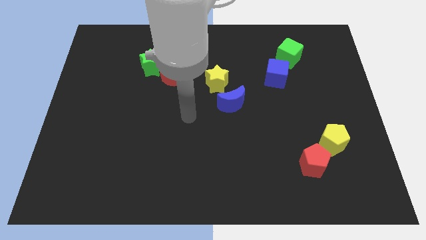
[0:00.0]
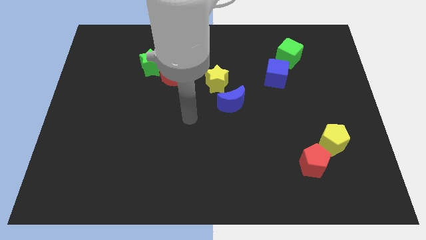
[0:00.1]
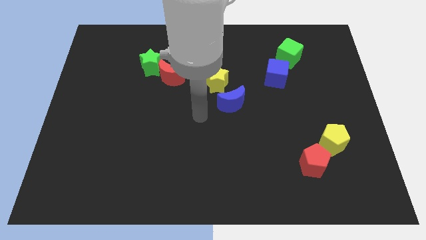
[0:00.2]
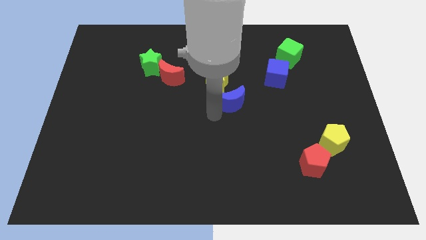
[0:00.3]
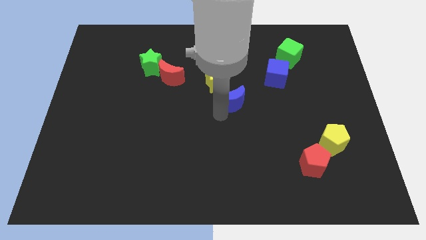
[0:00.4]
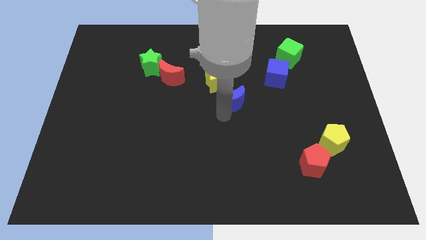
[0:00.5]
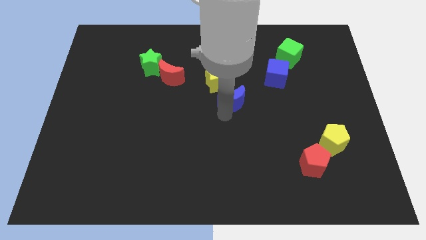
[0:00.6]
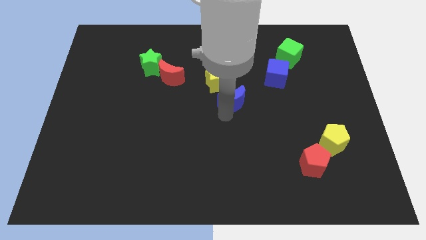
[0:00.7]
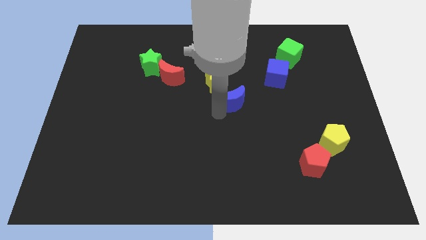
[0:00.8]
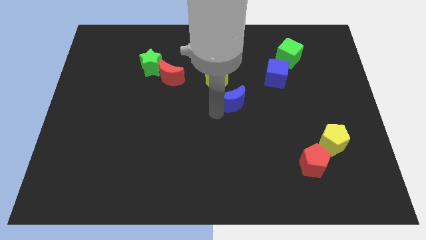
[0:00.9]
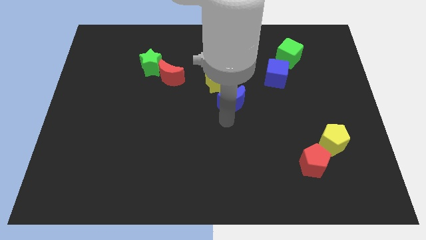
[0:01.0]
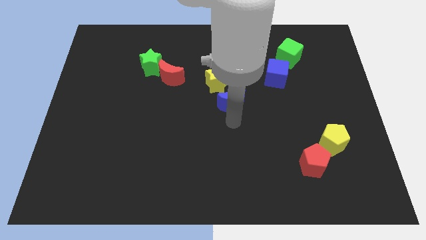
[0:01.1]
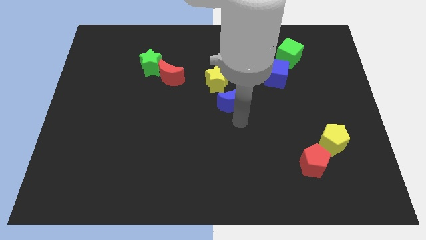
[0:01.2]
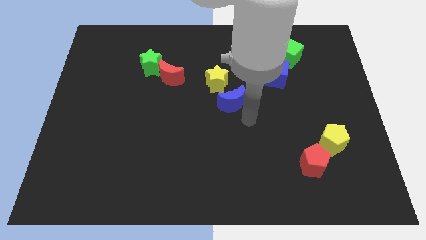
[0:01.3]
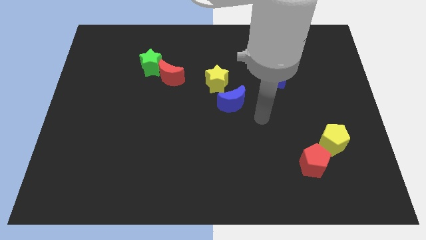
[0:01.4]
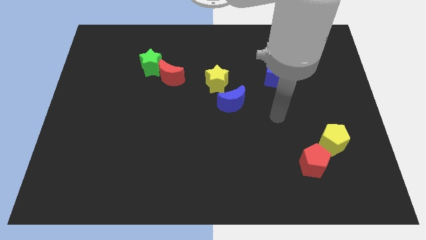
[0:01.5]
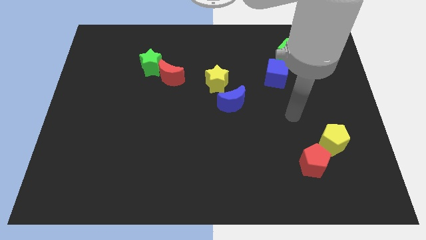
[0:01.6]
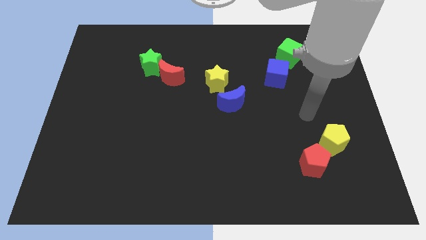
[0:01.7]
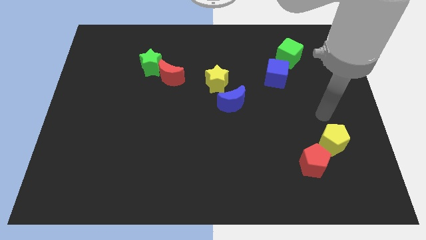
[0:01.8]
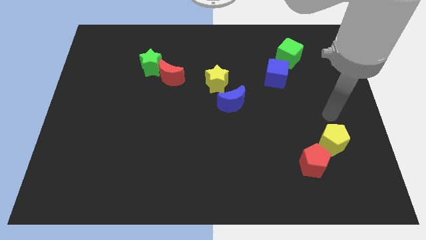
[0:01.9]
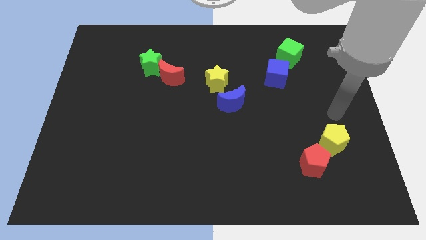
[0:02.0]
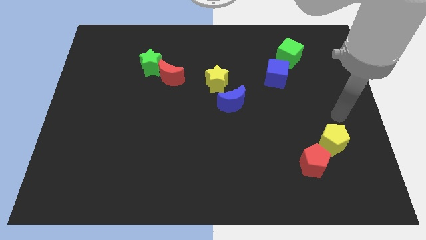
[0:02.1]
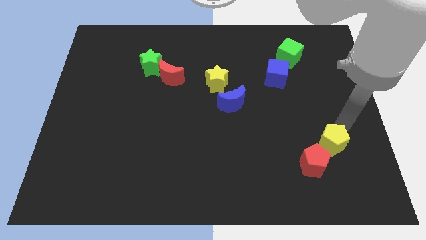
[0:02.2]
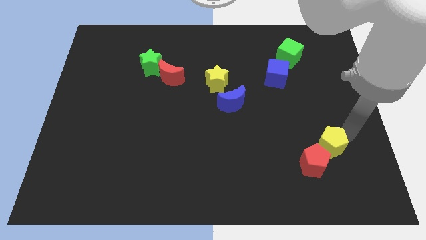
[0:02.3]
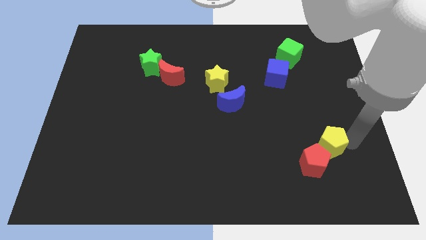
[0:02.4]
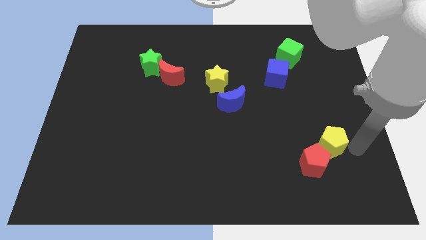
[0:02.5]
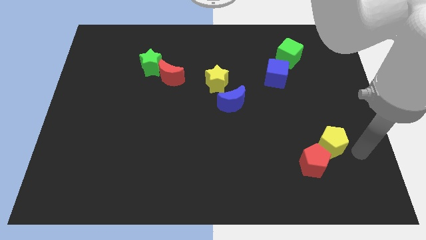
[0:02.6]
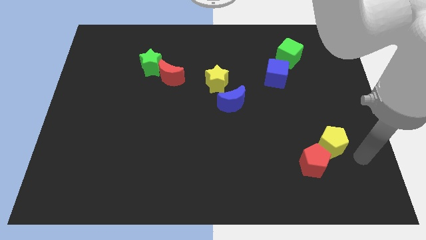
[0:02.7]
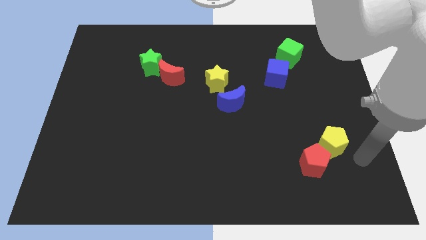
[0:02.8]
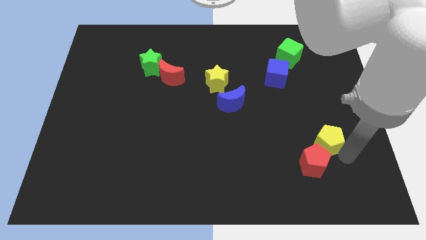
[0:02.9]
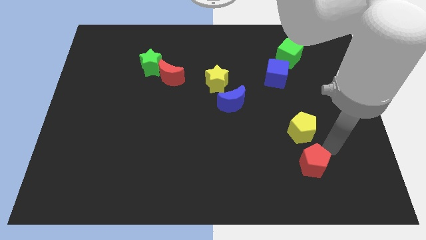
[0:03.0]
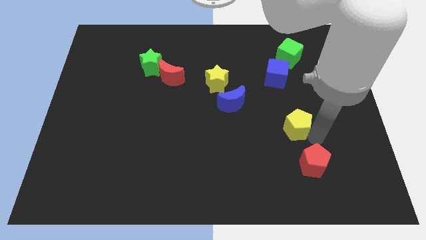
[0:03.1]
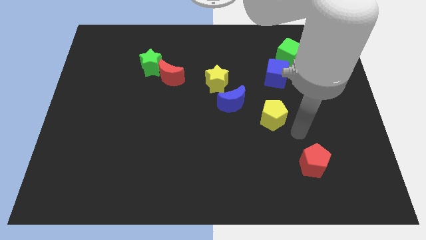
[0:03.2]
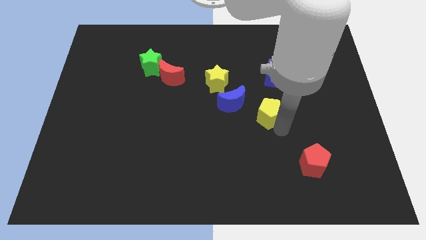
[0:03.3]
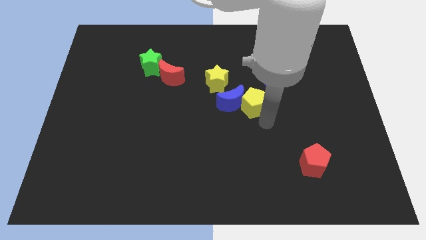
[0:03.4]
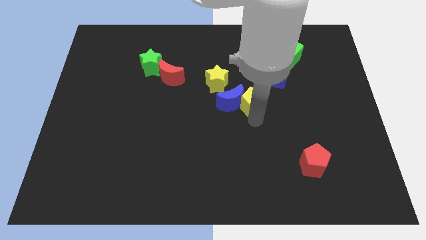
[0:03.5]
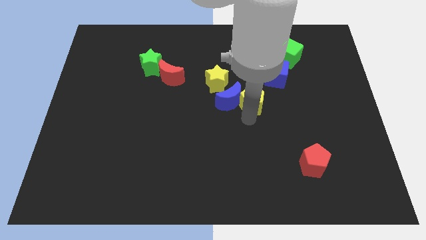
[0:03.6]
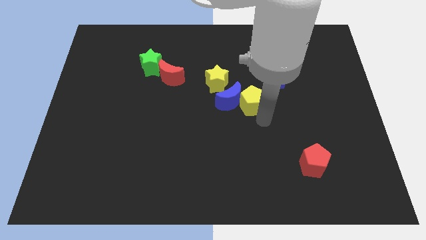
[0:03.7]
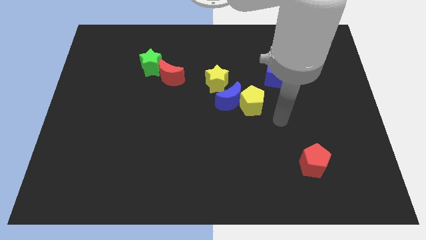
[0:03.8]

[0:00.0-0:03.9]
move the yellow pentagon to the right of the blue ctescent

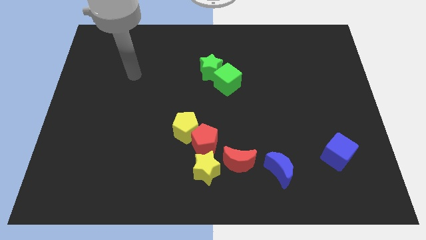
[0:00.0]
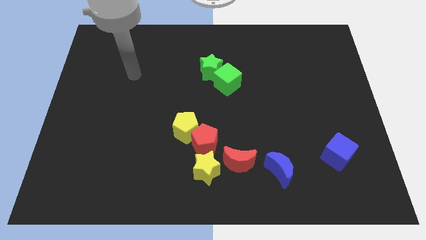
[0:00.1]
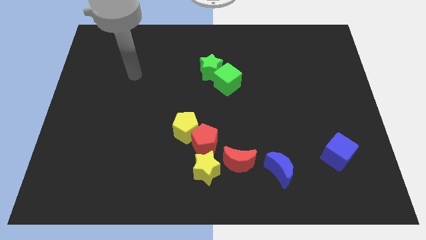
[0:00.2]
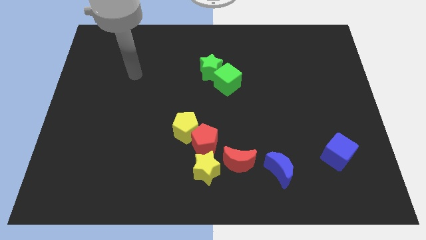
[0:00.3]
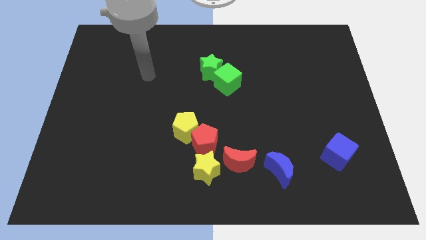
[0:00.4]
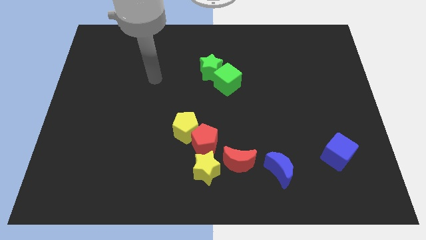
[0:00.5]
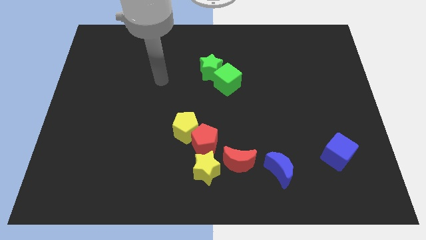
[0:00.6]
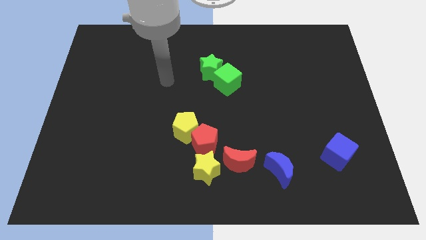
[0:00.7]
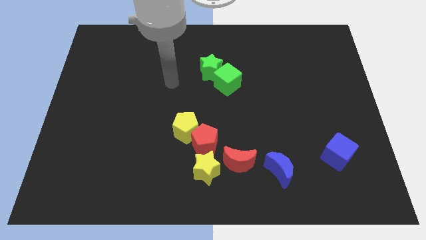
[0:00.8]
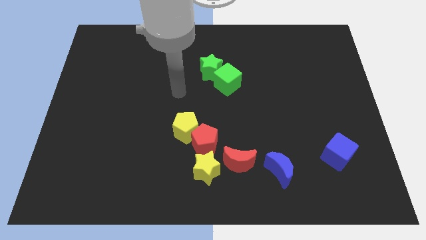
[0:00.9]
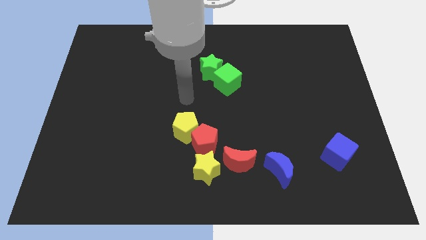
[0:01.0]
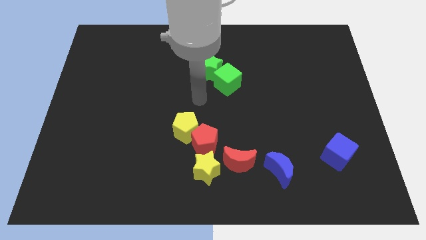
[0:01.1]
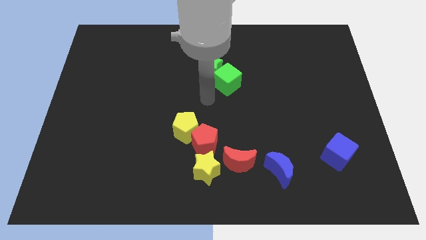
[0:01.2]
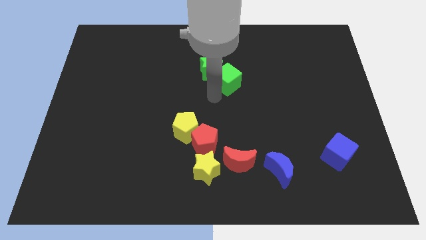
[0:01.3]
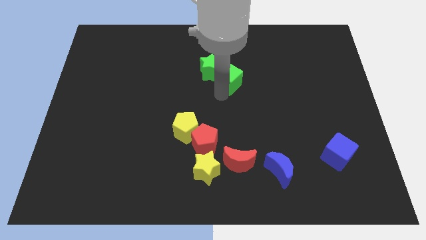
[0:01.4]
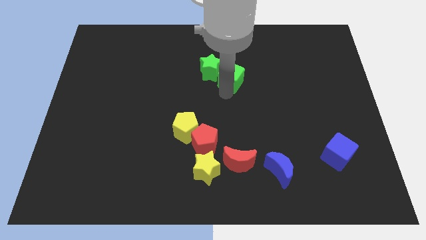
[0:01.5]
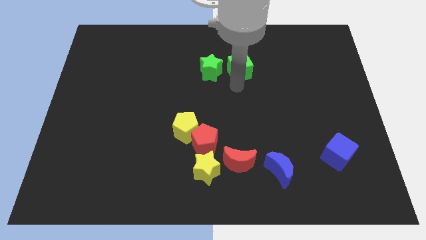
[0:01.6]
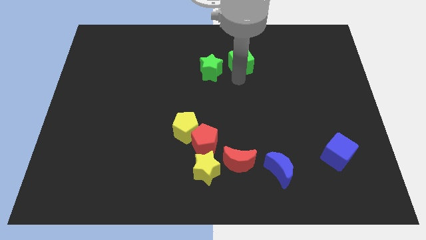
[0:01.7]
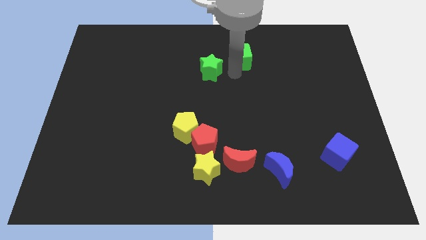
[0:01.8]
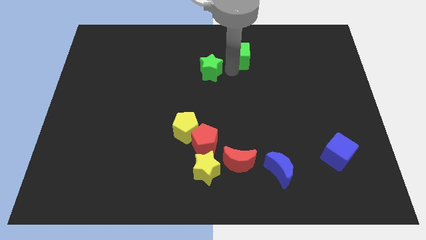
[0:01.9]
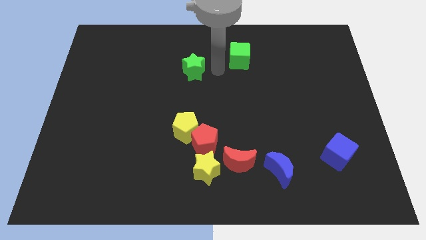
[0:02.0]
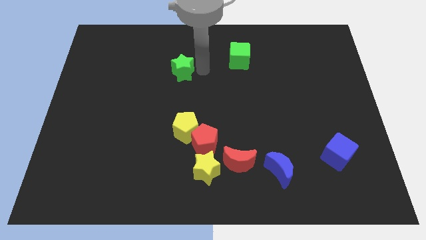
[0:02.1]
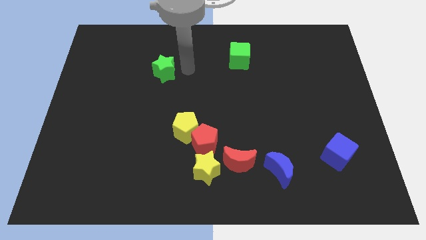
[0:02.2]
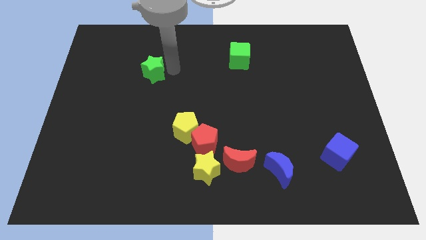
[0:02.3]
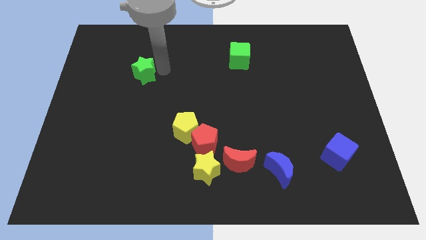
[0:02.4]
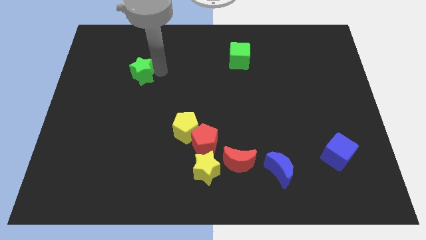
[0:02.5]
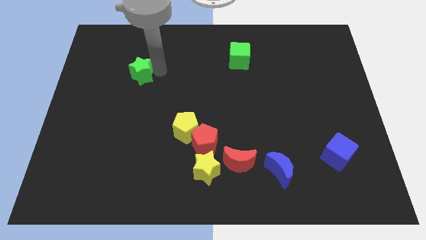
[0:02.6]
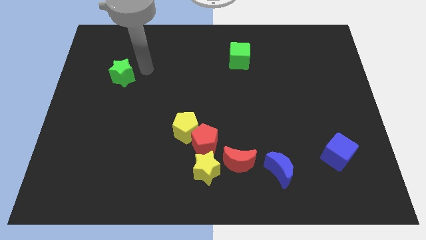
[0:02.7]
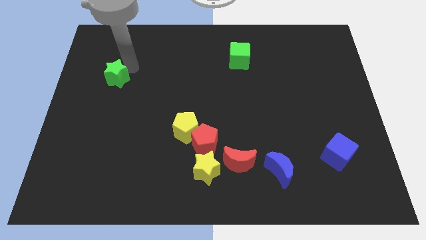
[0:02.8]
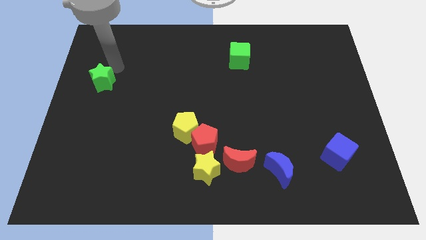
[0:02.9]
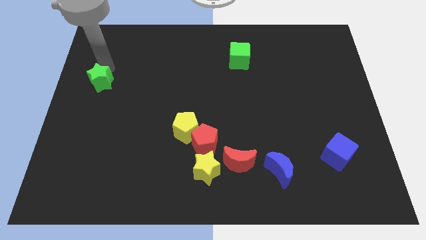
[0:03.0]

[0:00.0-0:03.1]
separate green star from the green cube

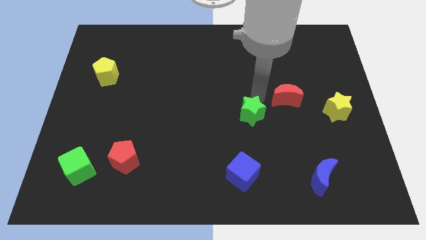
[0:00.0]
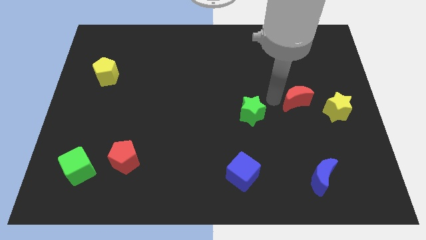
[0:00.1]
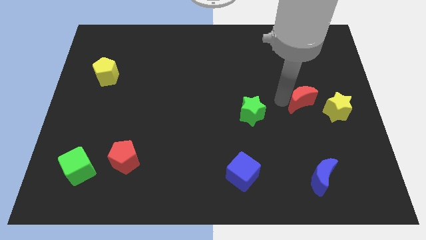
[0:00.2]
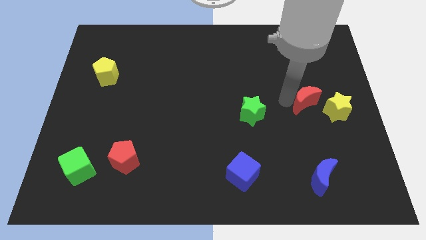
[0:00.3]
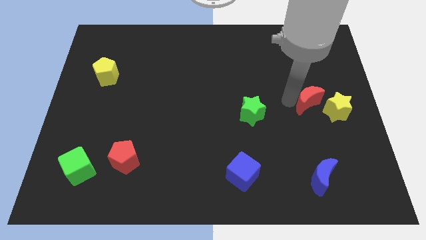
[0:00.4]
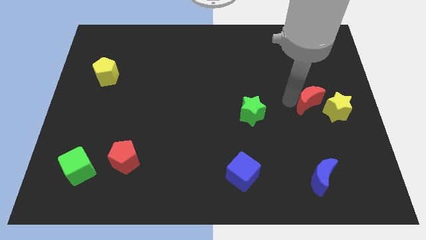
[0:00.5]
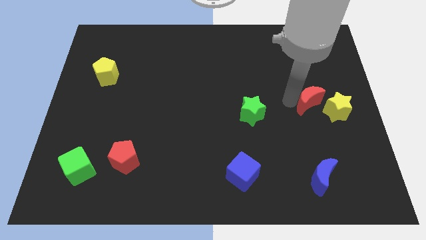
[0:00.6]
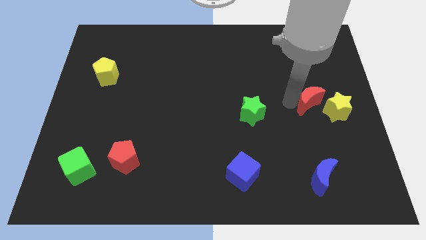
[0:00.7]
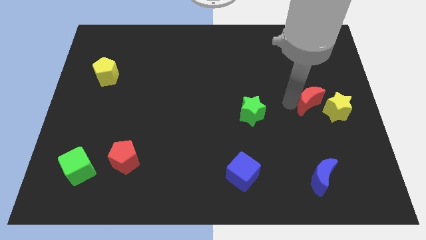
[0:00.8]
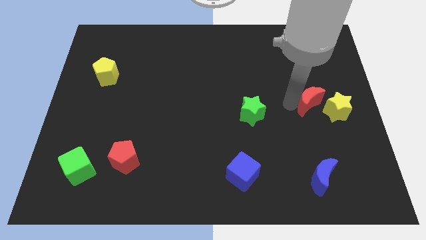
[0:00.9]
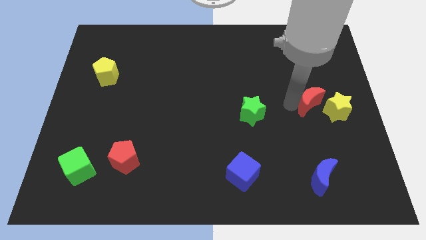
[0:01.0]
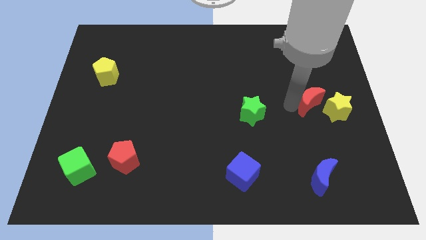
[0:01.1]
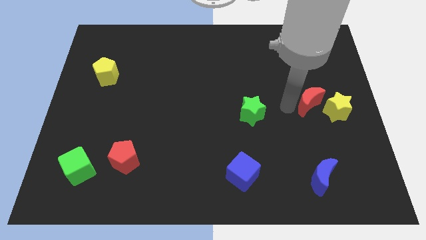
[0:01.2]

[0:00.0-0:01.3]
place red crescent beside yellow star

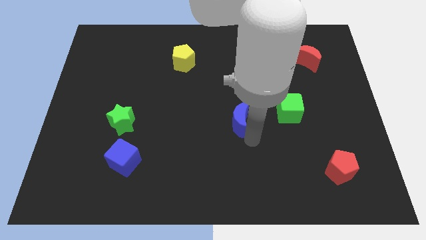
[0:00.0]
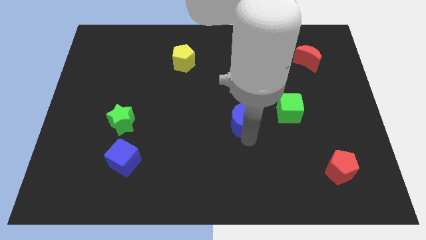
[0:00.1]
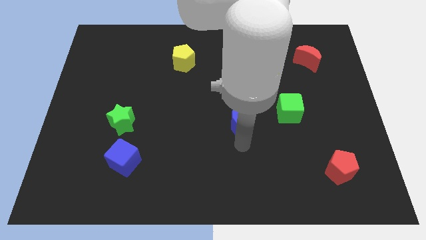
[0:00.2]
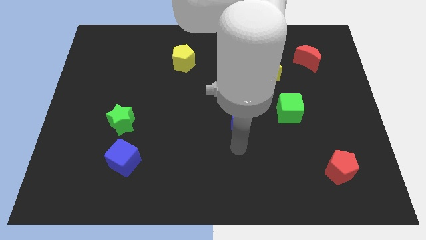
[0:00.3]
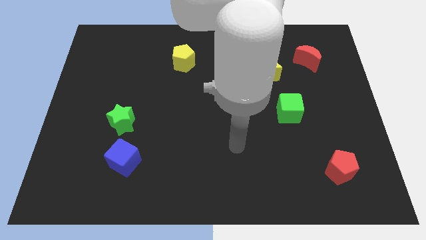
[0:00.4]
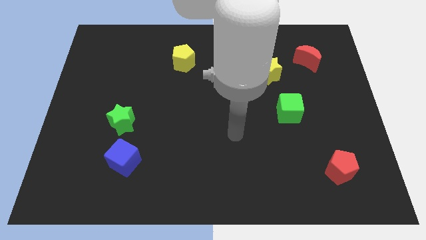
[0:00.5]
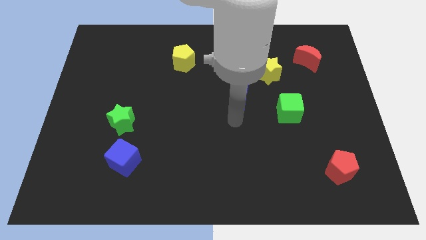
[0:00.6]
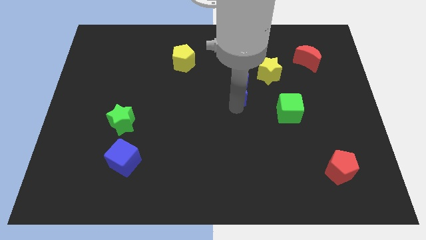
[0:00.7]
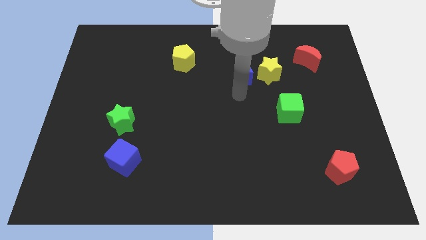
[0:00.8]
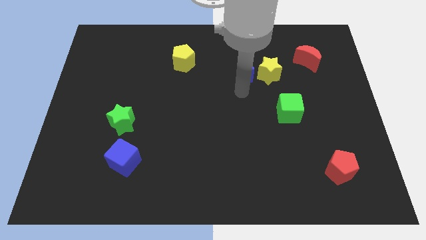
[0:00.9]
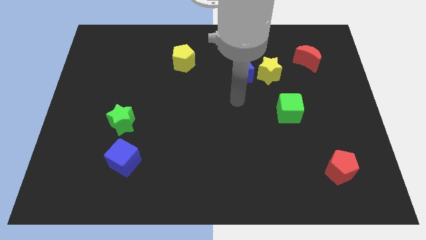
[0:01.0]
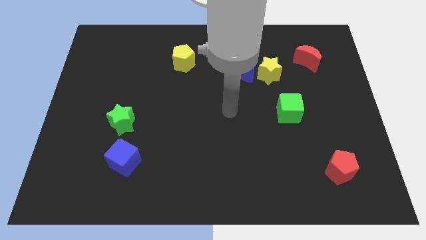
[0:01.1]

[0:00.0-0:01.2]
slightly move the blue cube to the left side of the yellow star
